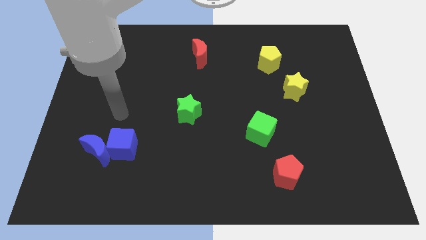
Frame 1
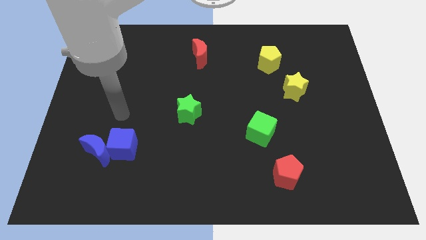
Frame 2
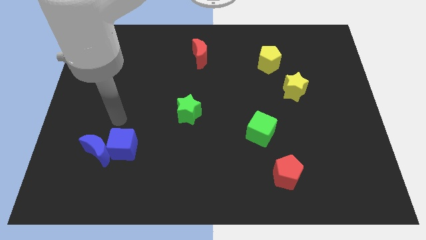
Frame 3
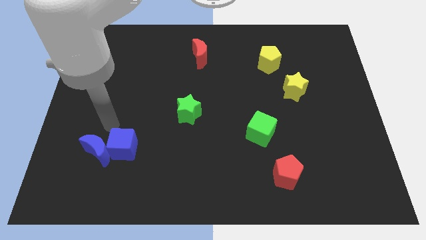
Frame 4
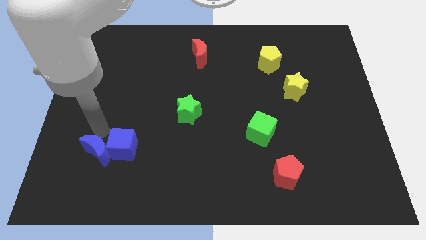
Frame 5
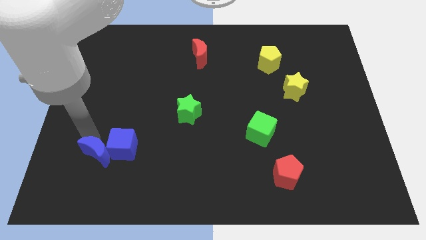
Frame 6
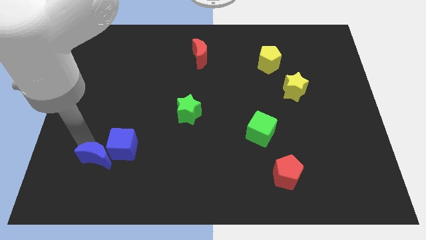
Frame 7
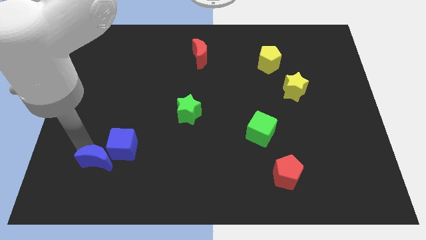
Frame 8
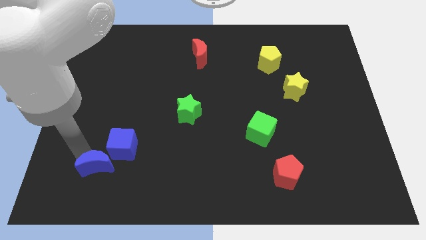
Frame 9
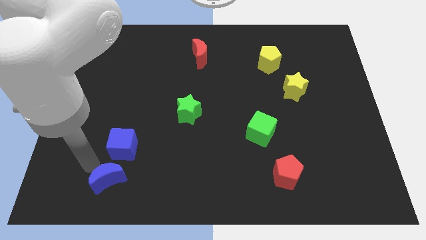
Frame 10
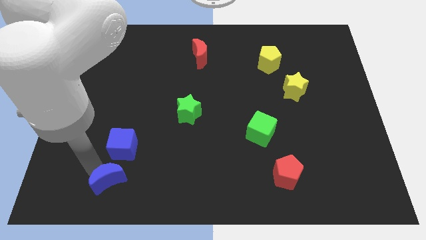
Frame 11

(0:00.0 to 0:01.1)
slide blue moon below the blue cube

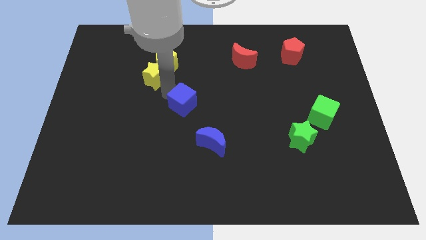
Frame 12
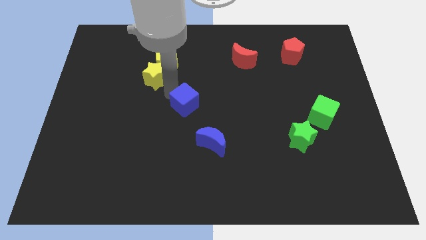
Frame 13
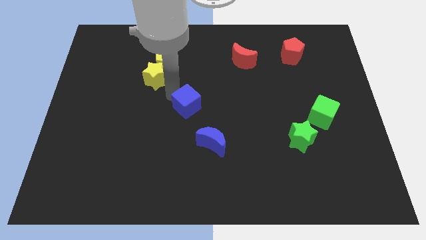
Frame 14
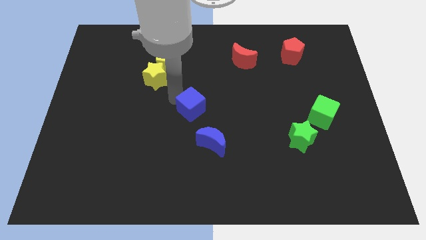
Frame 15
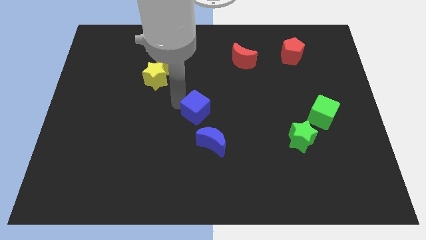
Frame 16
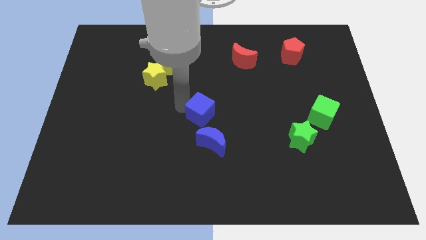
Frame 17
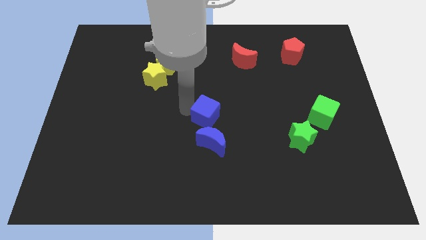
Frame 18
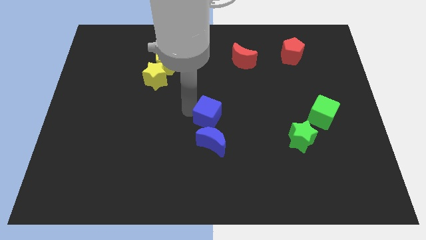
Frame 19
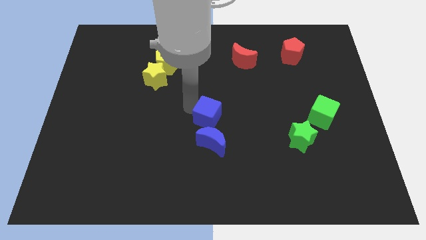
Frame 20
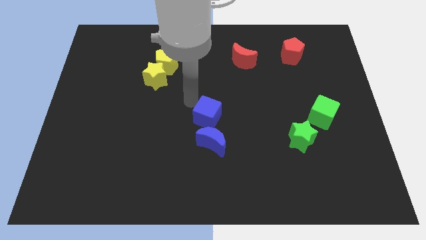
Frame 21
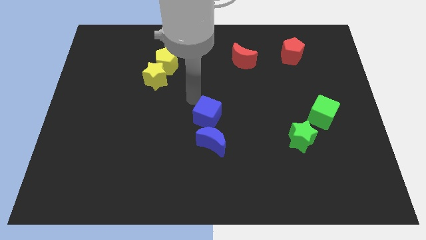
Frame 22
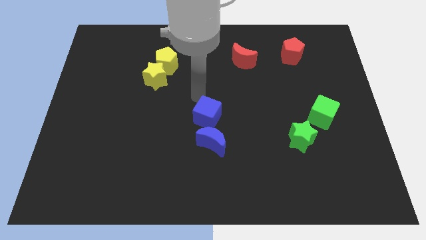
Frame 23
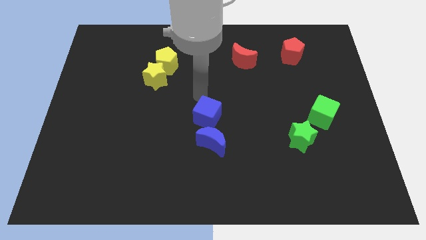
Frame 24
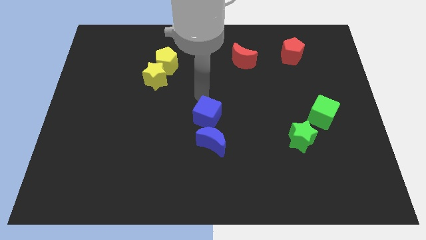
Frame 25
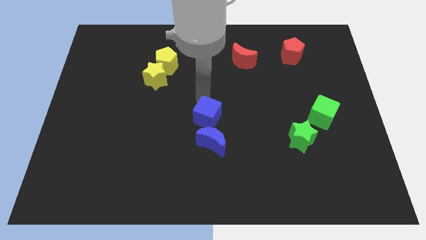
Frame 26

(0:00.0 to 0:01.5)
place the blue cube above the blue moon

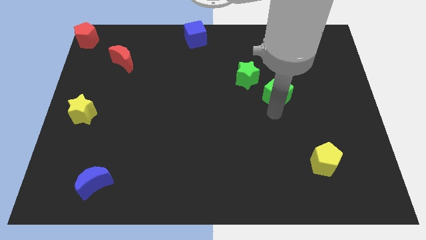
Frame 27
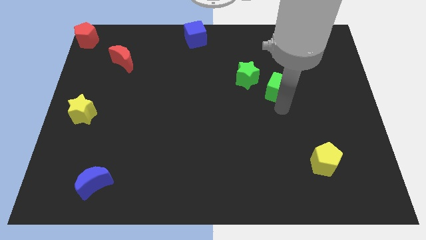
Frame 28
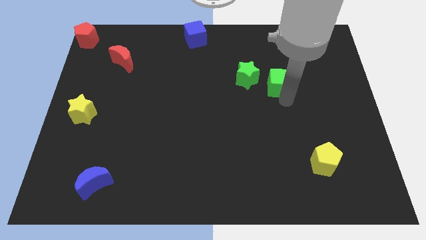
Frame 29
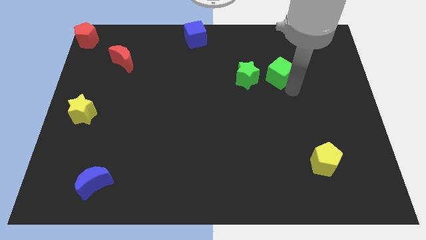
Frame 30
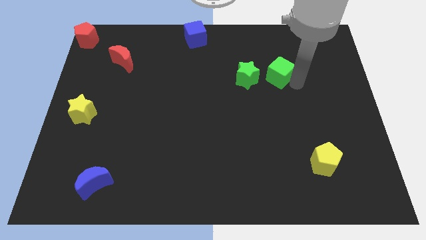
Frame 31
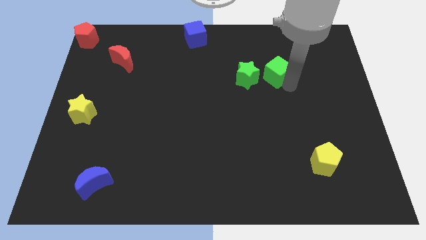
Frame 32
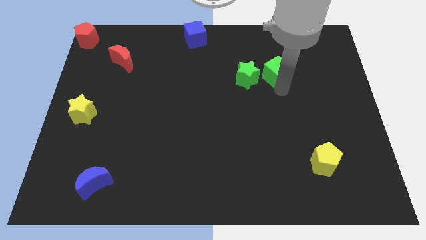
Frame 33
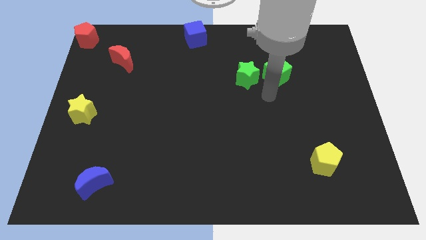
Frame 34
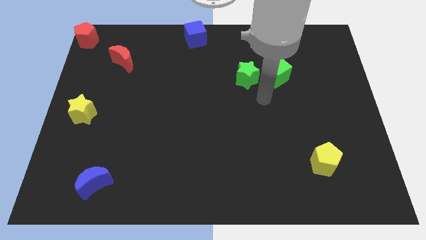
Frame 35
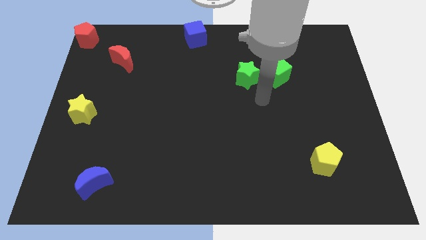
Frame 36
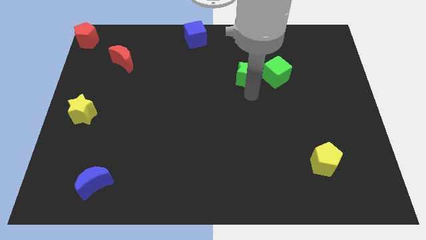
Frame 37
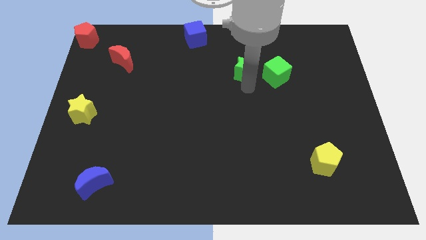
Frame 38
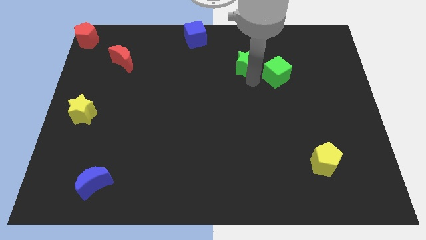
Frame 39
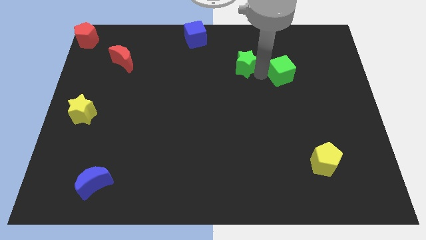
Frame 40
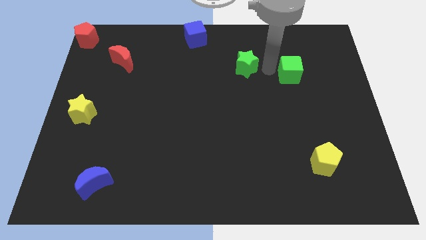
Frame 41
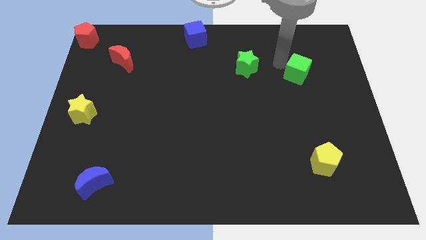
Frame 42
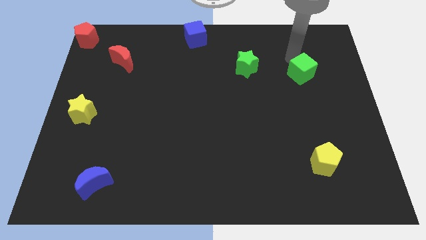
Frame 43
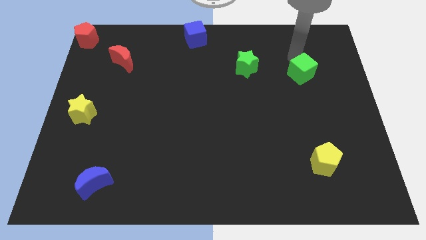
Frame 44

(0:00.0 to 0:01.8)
place the green cube to the right of the green star

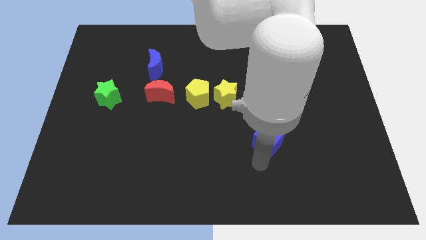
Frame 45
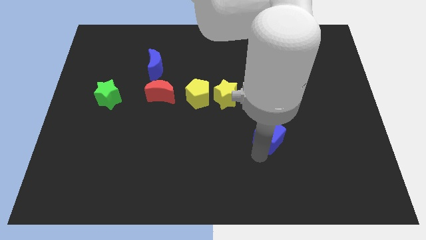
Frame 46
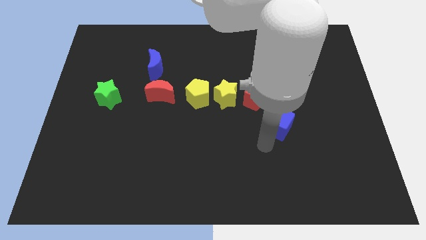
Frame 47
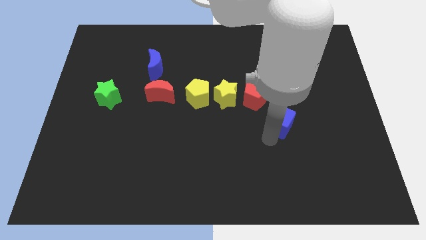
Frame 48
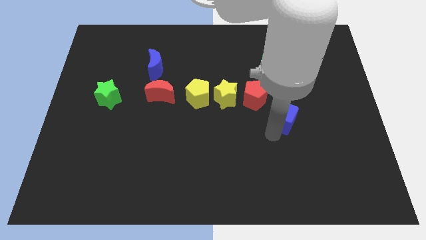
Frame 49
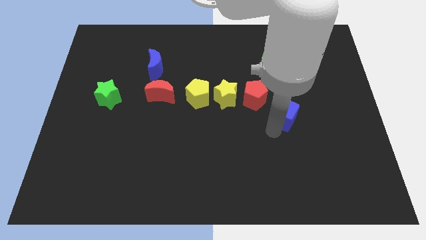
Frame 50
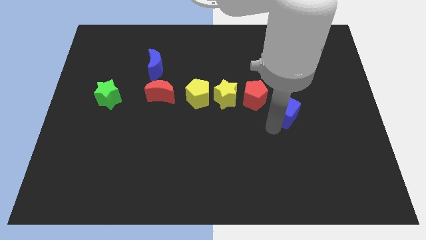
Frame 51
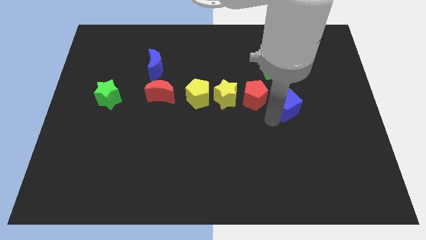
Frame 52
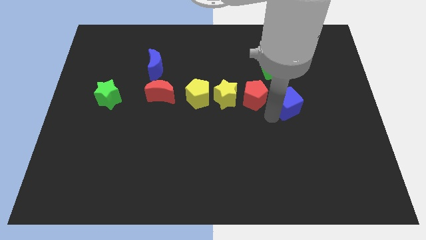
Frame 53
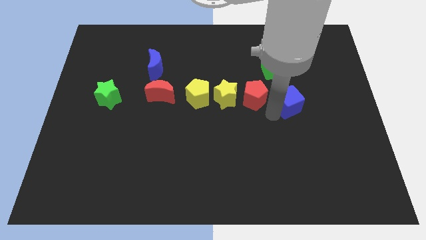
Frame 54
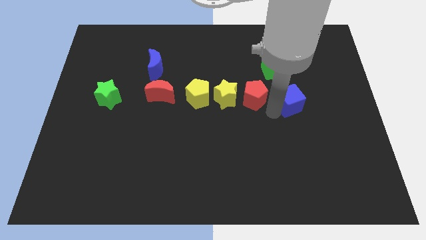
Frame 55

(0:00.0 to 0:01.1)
push blue cube upwards

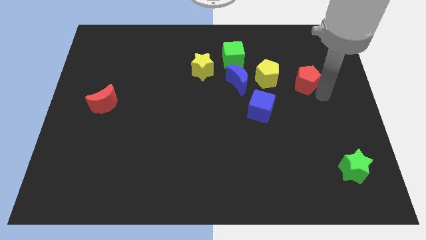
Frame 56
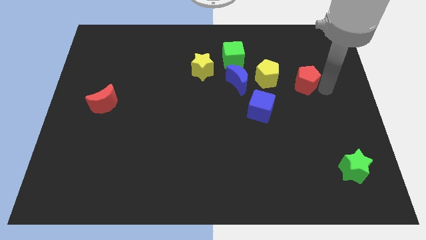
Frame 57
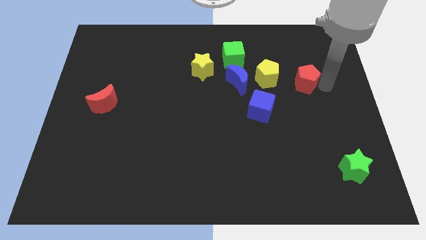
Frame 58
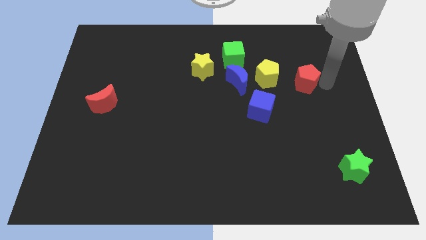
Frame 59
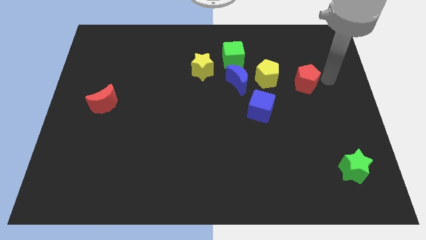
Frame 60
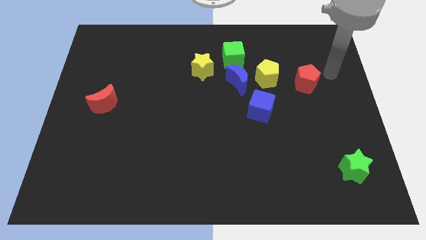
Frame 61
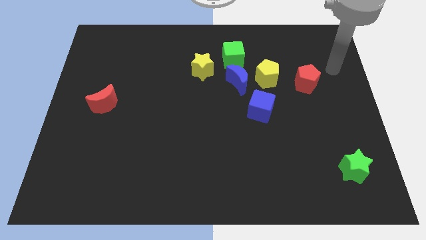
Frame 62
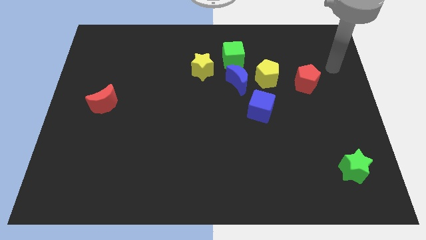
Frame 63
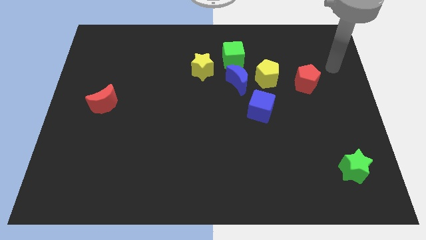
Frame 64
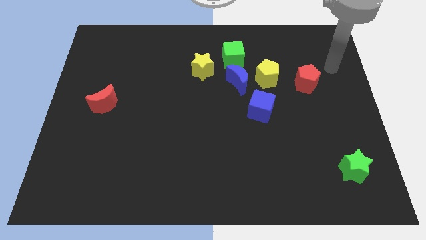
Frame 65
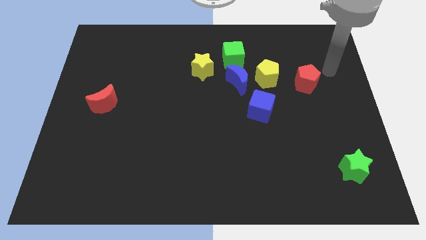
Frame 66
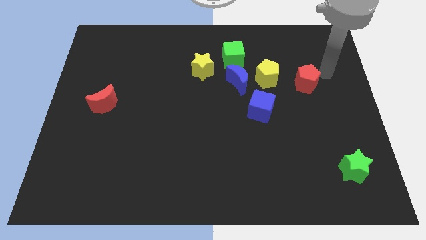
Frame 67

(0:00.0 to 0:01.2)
touch the right side of the red pentagon

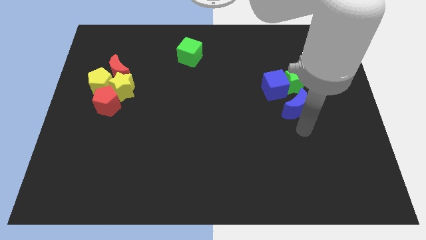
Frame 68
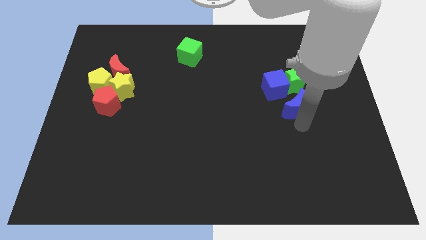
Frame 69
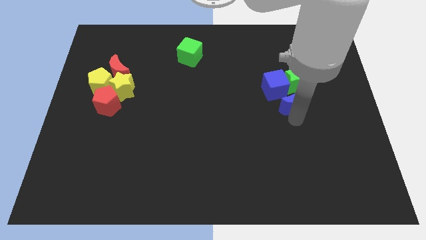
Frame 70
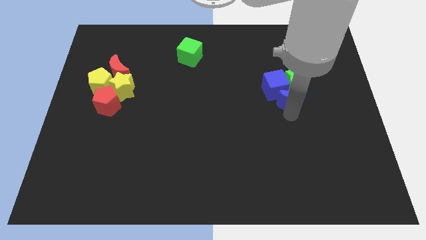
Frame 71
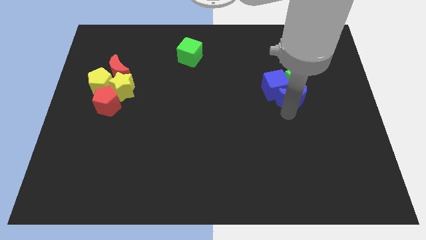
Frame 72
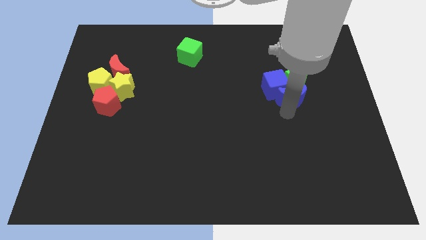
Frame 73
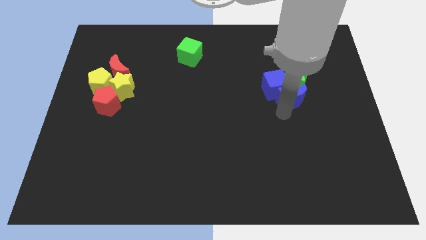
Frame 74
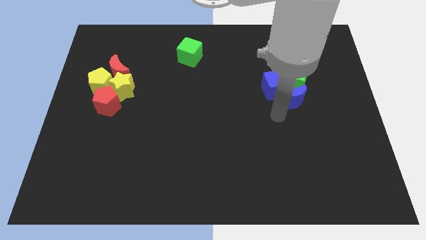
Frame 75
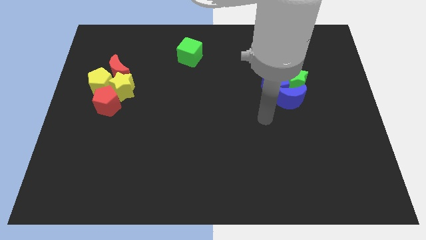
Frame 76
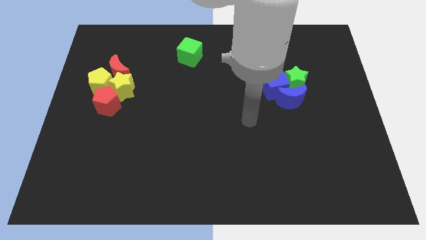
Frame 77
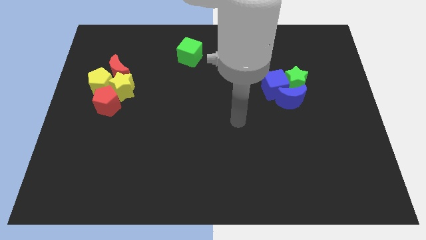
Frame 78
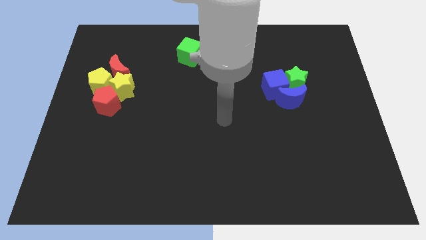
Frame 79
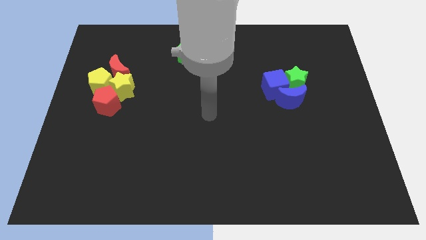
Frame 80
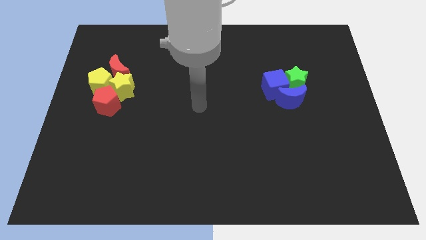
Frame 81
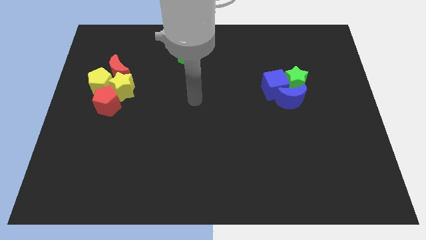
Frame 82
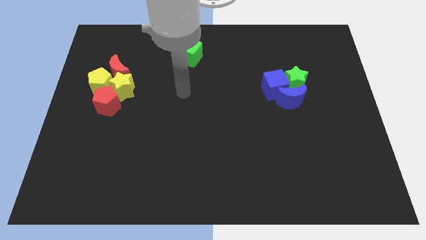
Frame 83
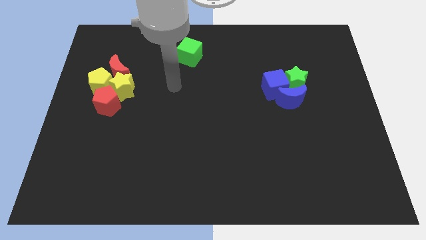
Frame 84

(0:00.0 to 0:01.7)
slide the blue crescent into the blue cube

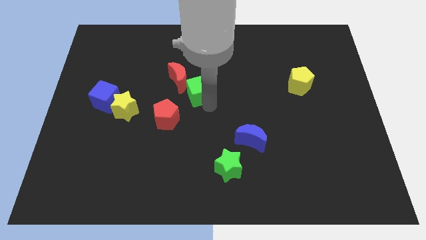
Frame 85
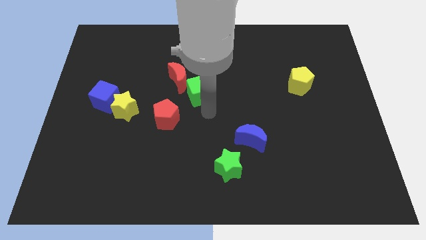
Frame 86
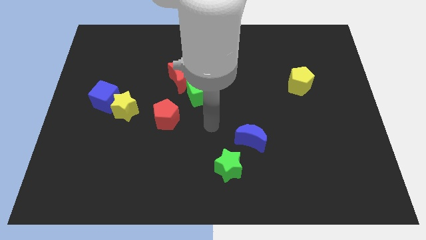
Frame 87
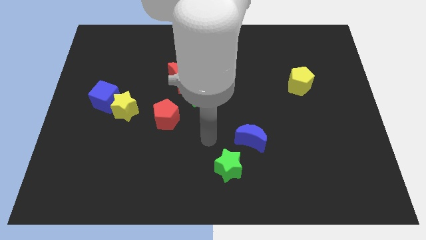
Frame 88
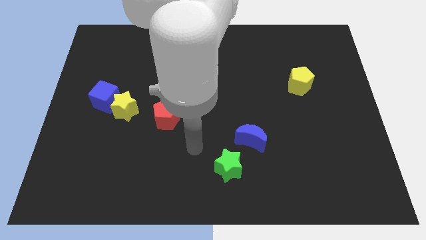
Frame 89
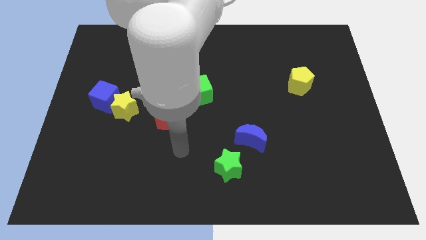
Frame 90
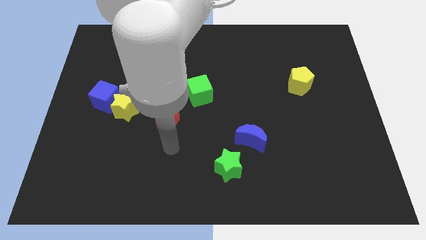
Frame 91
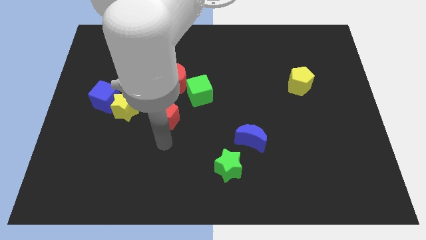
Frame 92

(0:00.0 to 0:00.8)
move your arm at the bottom of the red pentagon
